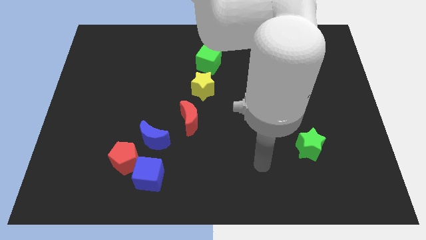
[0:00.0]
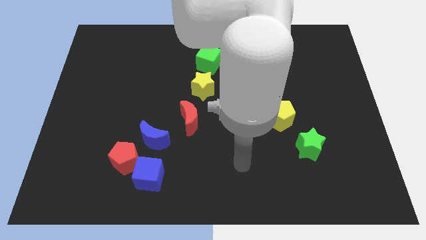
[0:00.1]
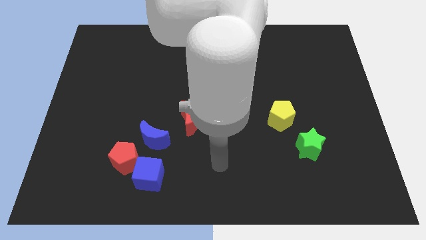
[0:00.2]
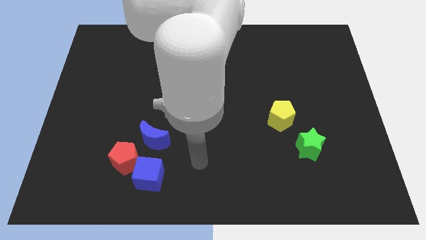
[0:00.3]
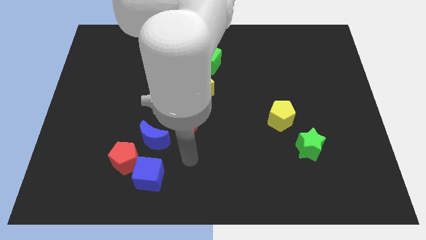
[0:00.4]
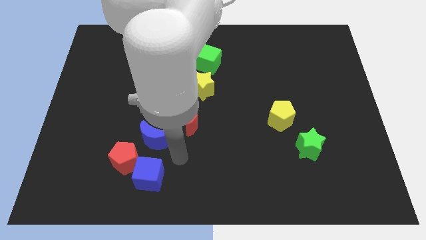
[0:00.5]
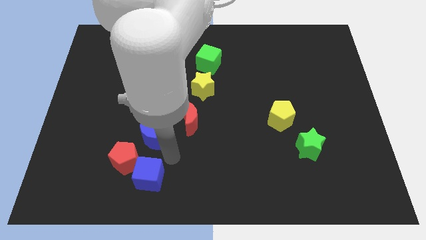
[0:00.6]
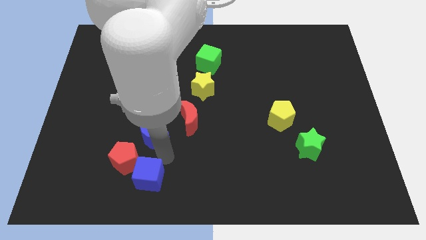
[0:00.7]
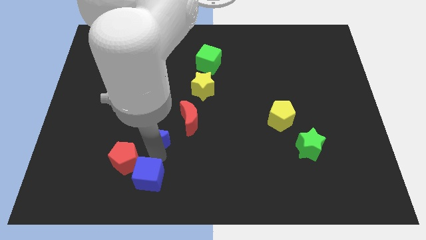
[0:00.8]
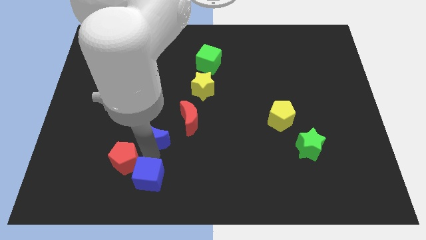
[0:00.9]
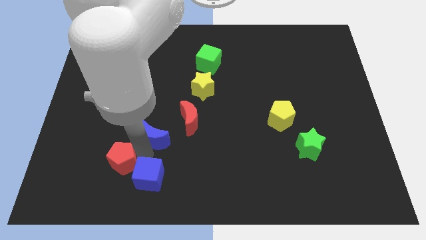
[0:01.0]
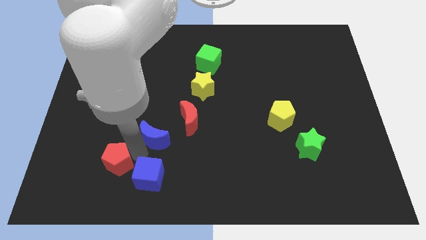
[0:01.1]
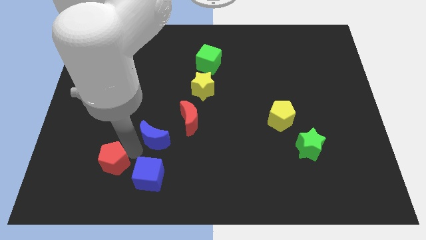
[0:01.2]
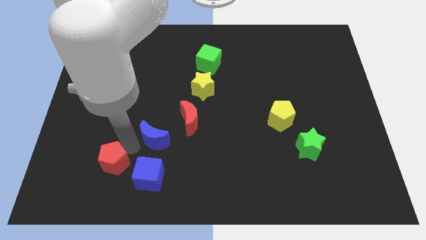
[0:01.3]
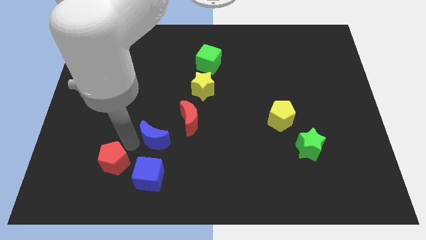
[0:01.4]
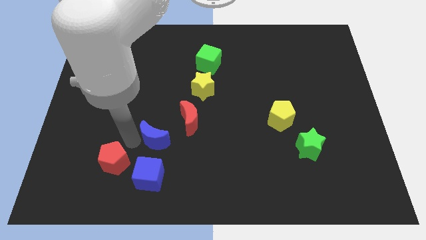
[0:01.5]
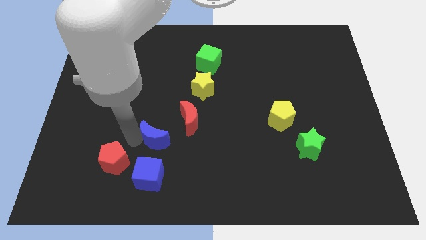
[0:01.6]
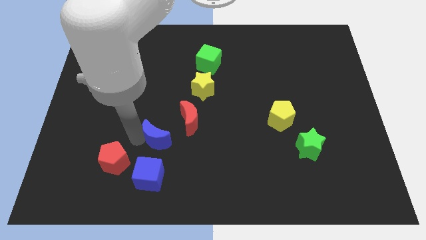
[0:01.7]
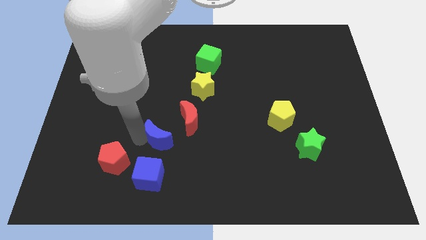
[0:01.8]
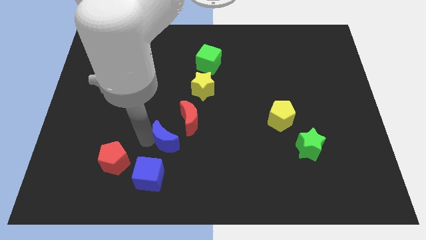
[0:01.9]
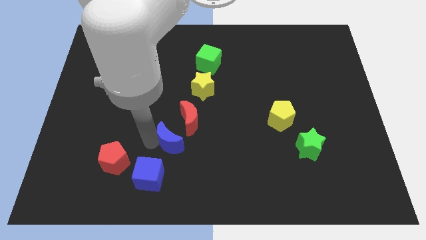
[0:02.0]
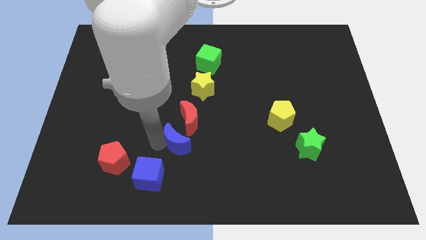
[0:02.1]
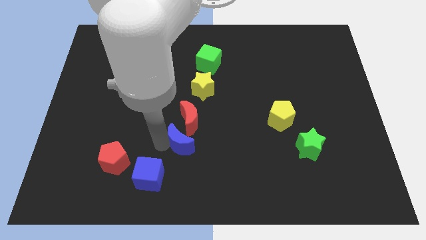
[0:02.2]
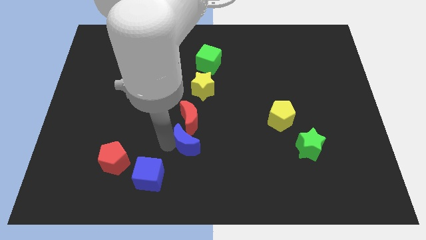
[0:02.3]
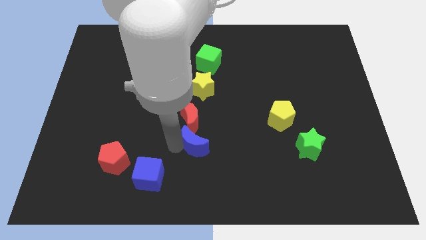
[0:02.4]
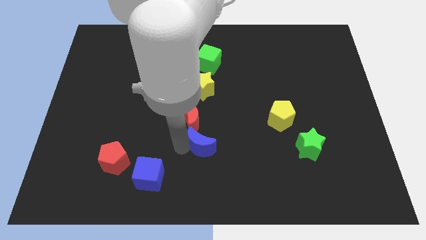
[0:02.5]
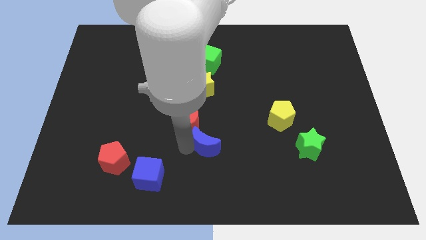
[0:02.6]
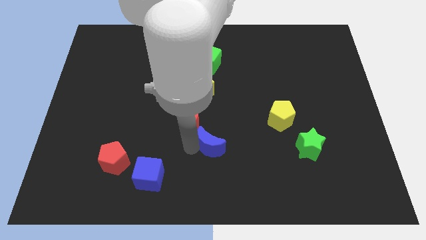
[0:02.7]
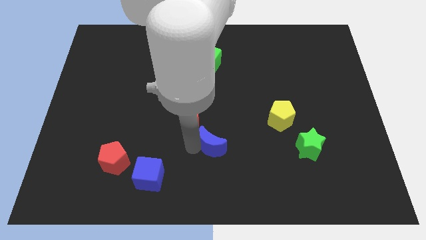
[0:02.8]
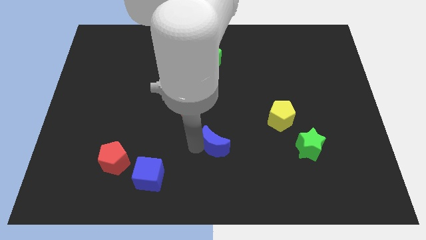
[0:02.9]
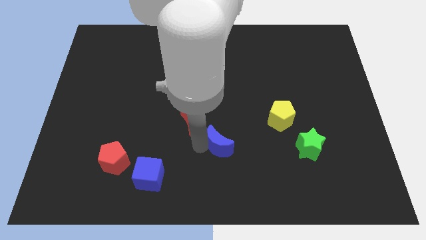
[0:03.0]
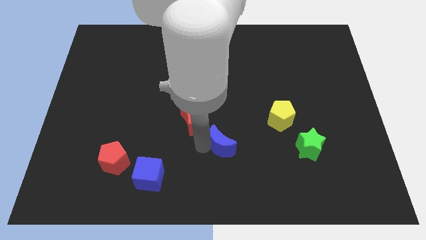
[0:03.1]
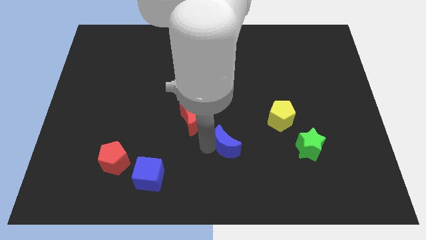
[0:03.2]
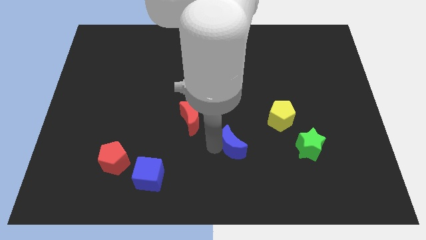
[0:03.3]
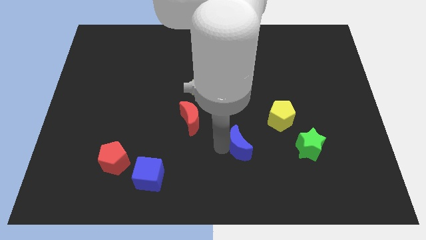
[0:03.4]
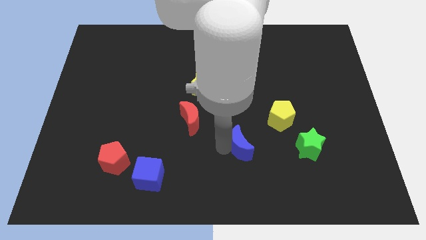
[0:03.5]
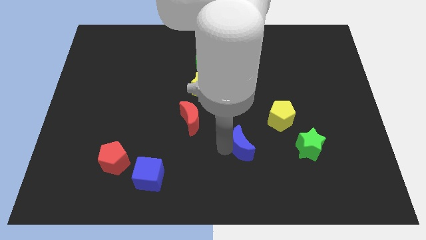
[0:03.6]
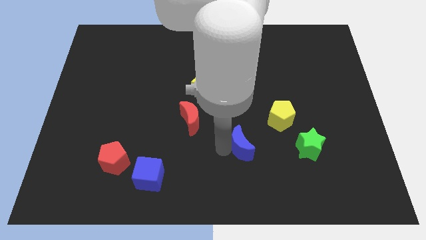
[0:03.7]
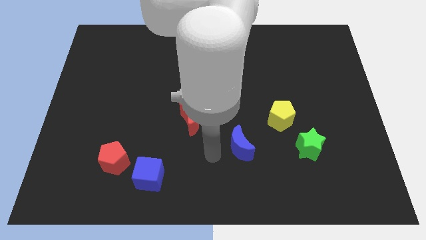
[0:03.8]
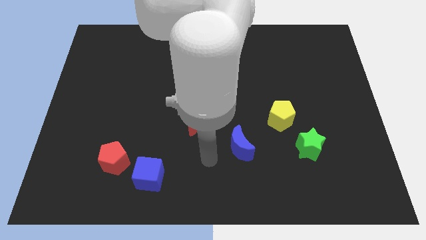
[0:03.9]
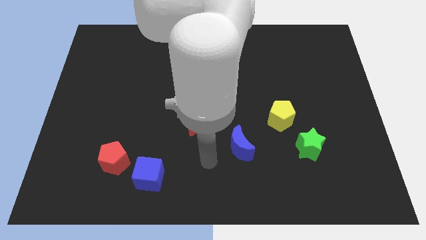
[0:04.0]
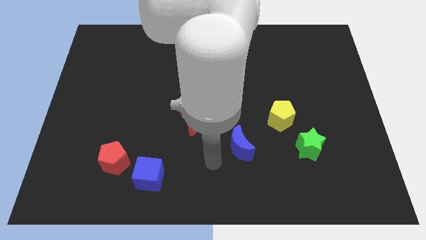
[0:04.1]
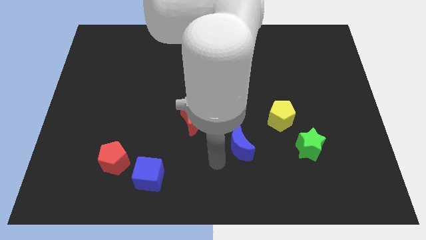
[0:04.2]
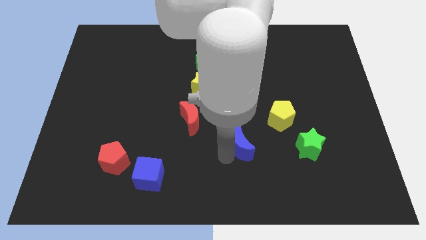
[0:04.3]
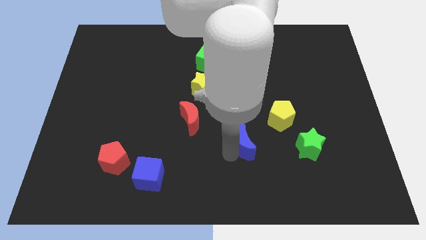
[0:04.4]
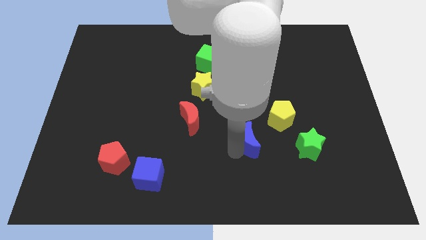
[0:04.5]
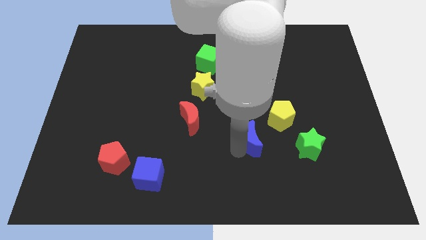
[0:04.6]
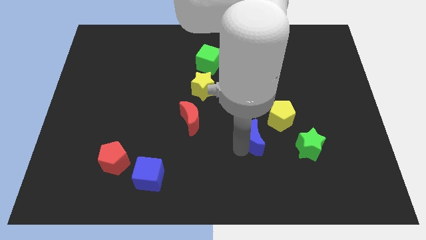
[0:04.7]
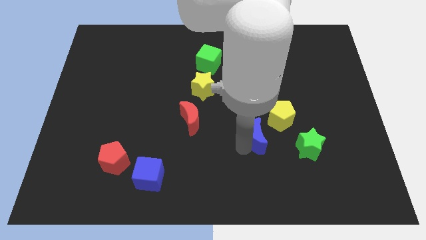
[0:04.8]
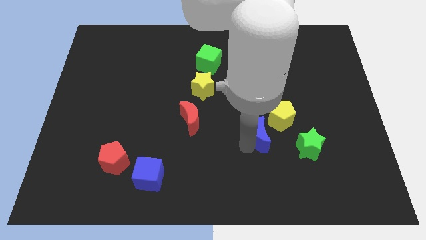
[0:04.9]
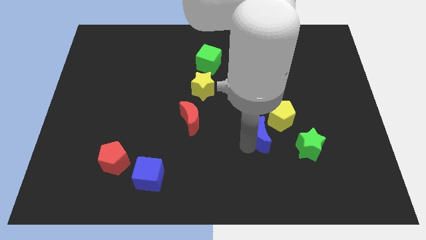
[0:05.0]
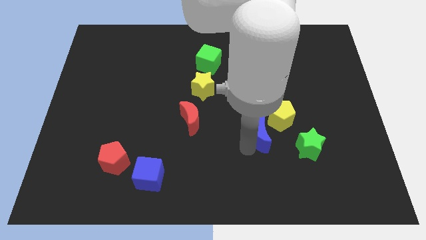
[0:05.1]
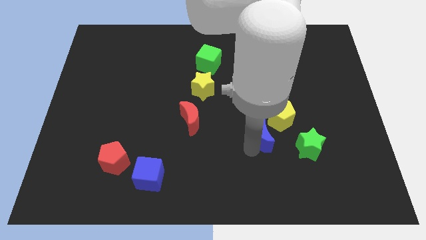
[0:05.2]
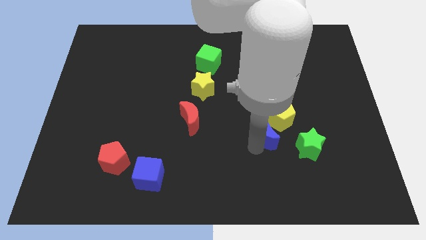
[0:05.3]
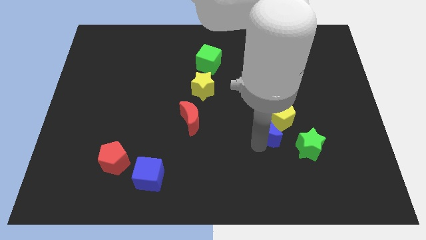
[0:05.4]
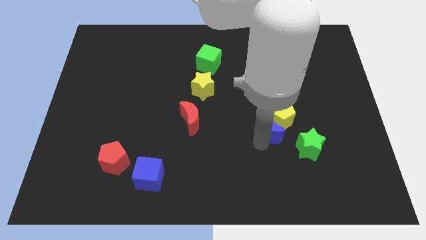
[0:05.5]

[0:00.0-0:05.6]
put the blue moon towards the yellow pentagon

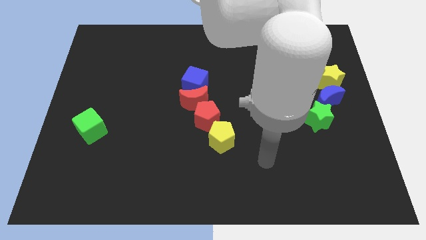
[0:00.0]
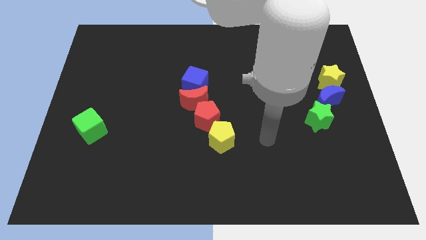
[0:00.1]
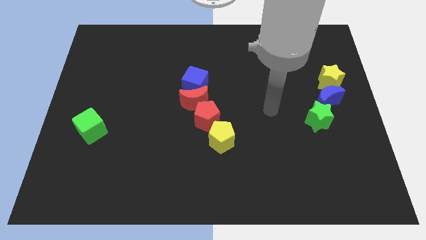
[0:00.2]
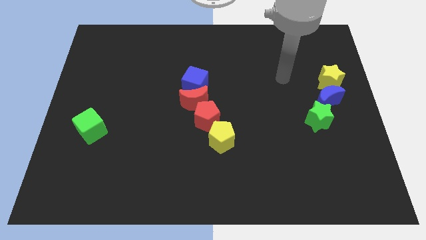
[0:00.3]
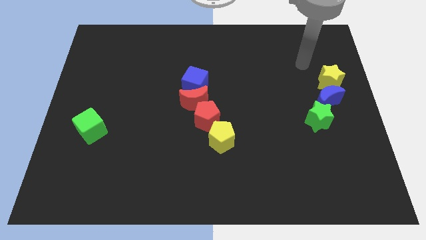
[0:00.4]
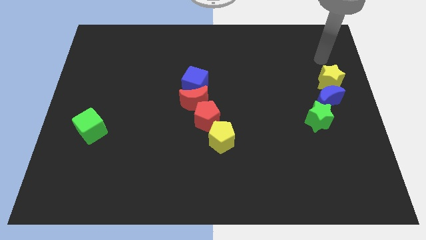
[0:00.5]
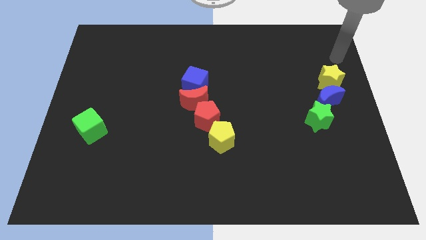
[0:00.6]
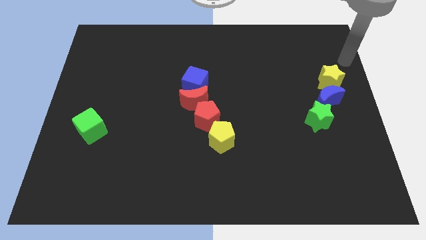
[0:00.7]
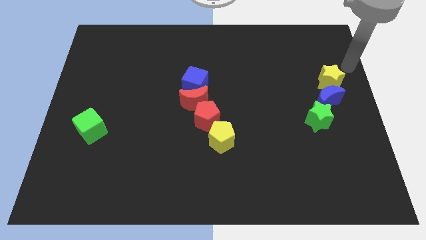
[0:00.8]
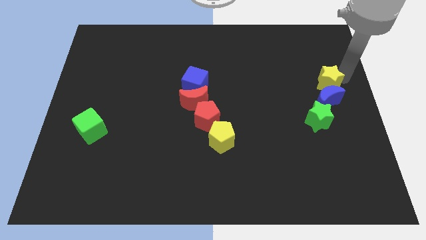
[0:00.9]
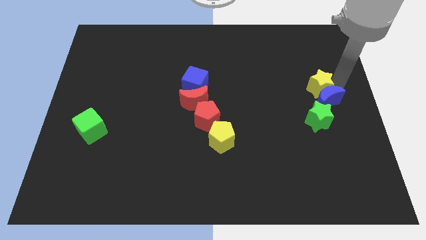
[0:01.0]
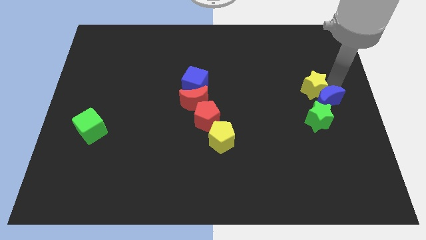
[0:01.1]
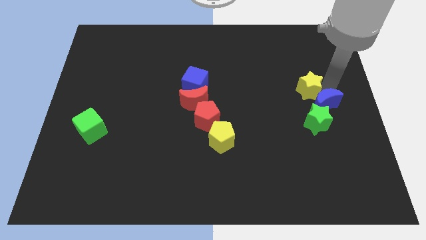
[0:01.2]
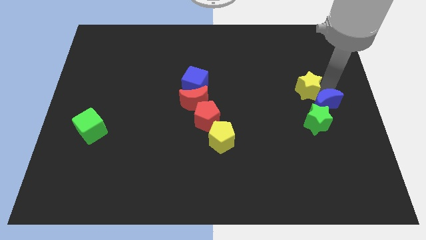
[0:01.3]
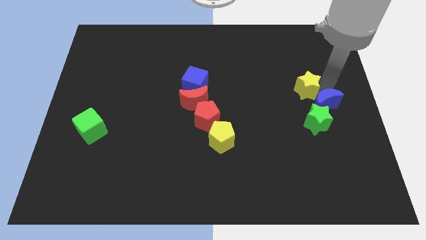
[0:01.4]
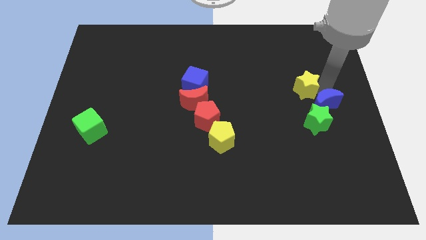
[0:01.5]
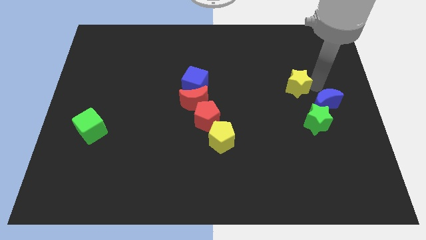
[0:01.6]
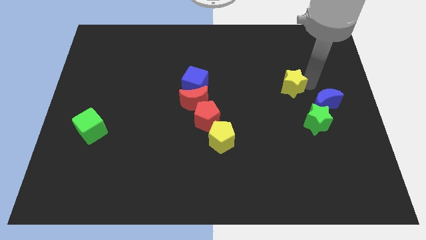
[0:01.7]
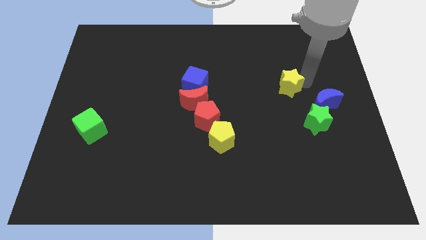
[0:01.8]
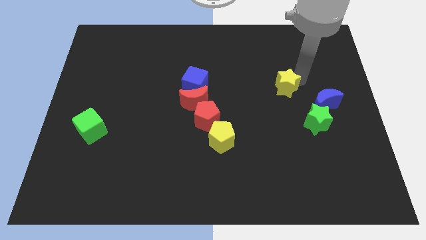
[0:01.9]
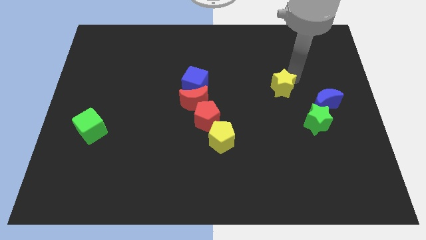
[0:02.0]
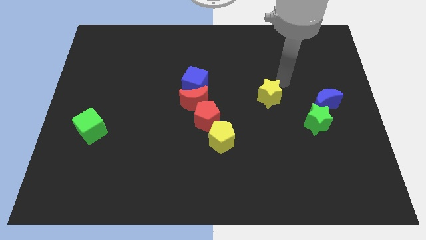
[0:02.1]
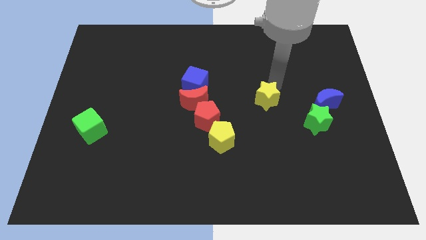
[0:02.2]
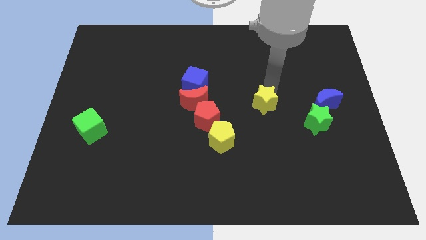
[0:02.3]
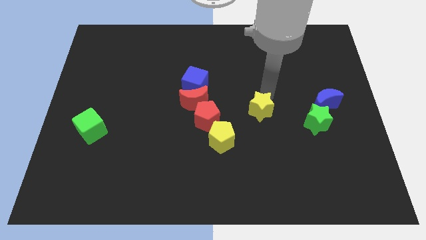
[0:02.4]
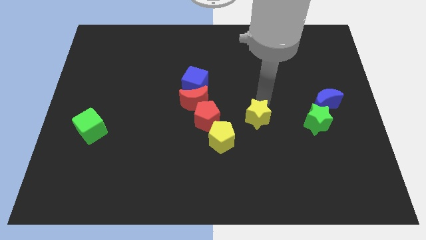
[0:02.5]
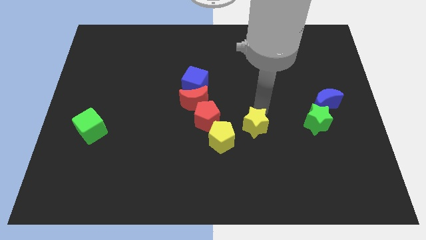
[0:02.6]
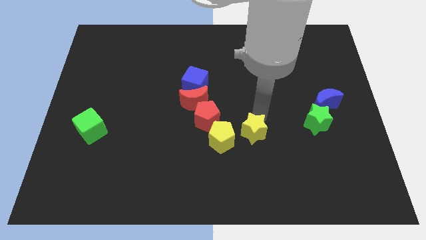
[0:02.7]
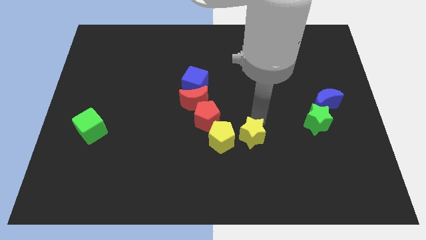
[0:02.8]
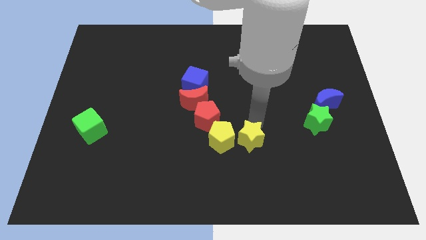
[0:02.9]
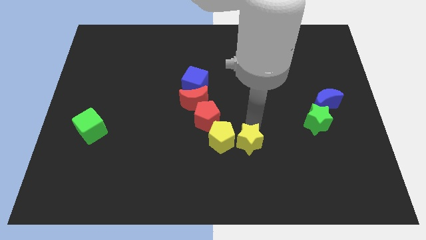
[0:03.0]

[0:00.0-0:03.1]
put the yellow star next to the yellow pentagon

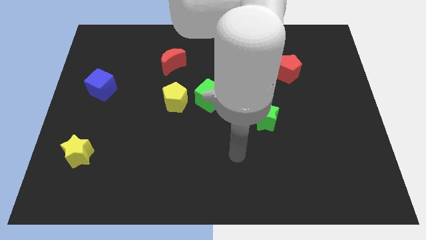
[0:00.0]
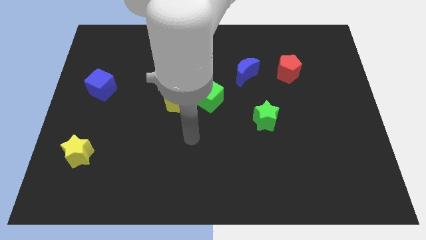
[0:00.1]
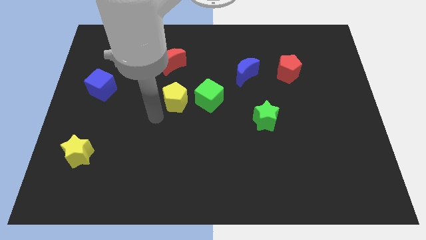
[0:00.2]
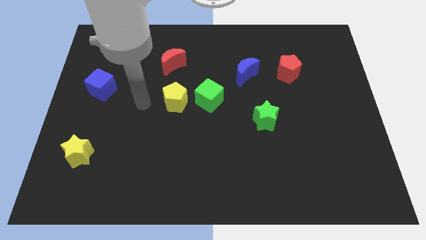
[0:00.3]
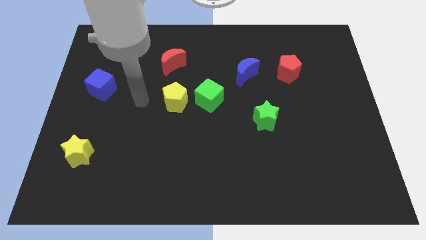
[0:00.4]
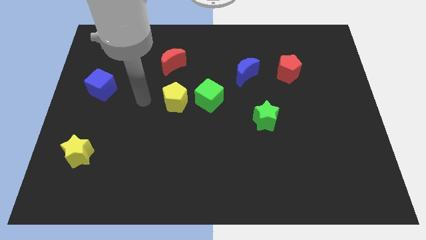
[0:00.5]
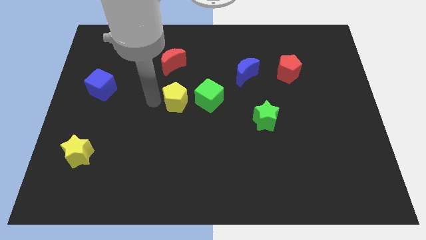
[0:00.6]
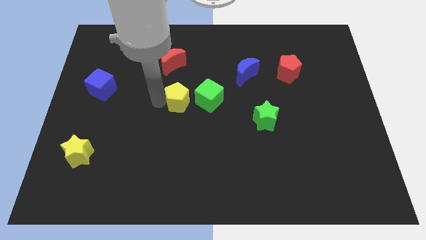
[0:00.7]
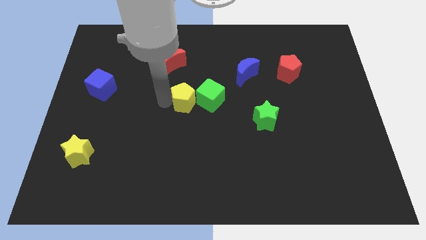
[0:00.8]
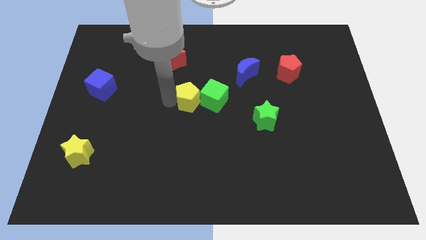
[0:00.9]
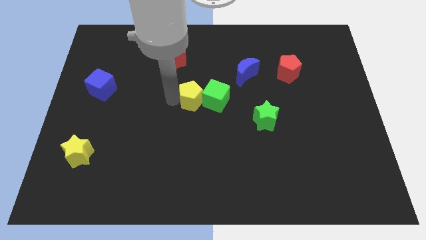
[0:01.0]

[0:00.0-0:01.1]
slide the yellow pentagon close to the green cube
